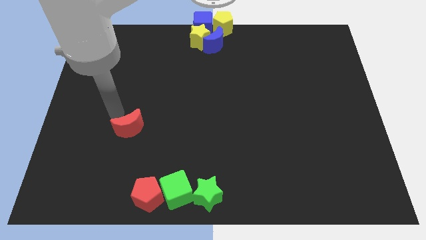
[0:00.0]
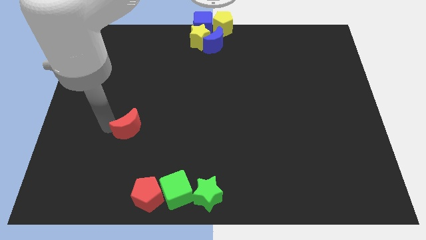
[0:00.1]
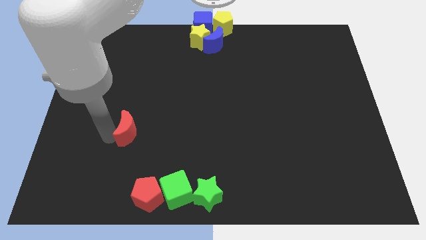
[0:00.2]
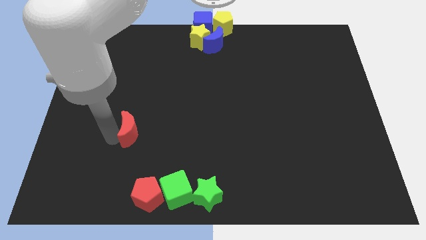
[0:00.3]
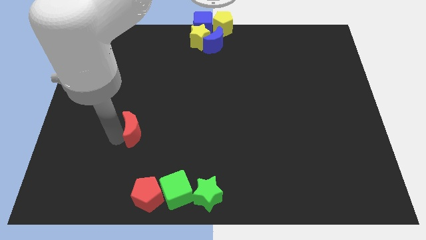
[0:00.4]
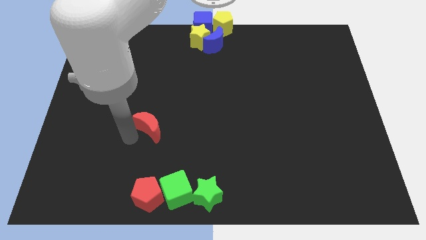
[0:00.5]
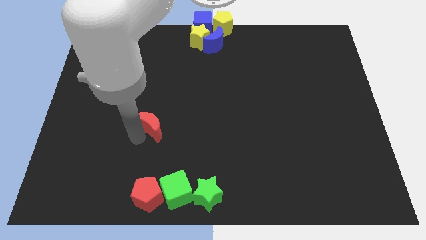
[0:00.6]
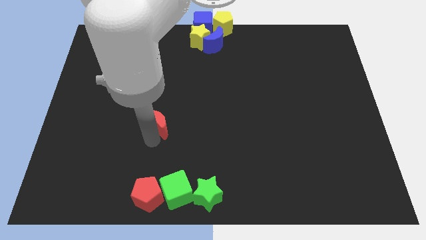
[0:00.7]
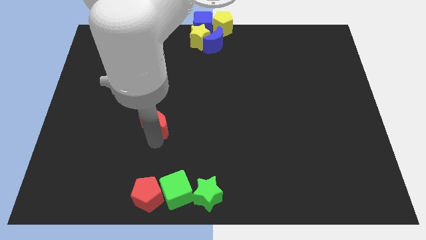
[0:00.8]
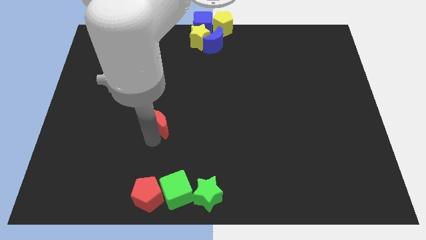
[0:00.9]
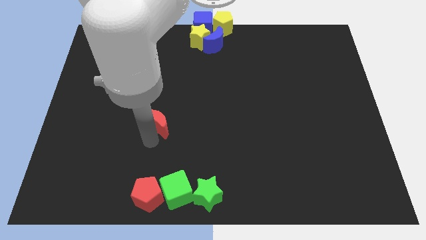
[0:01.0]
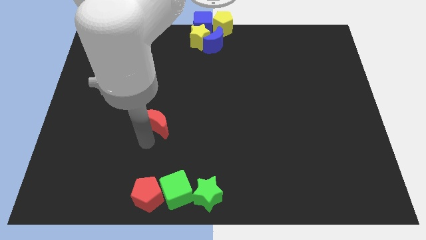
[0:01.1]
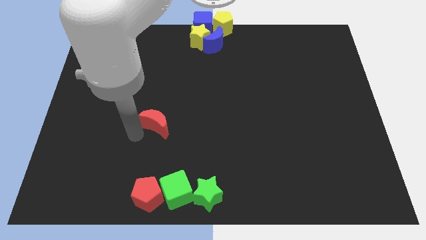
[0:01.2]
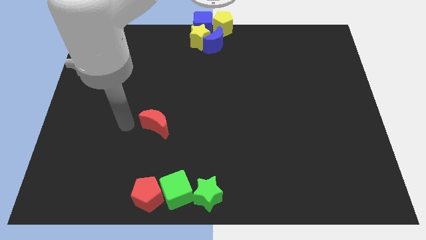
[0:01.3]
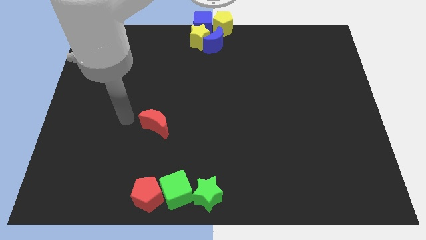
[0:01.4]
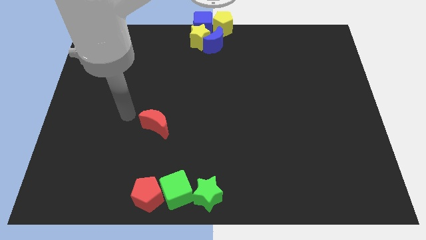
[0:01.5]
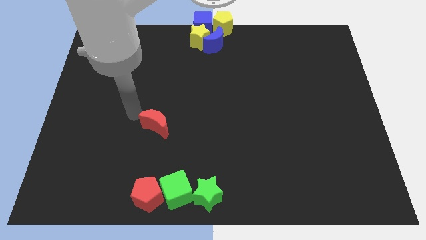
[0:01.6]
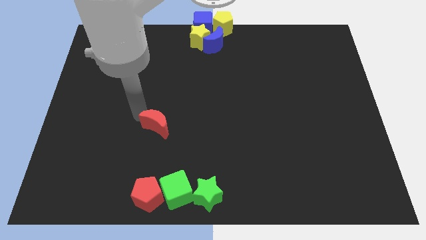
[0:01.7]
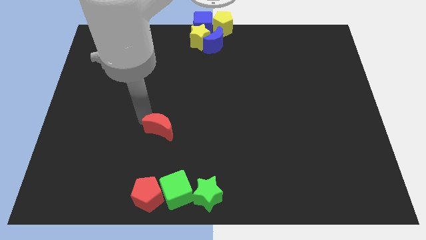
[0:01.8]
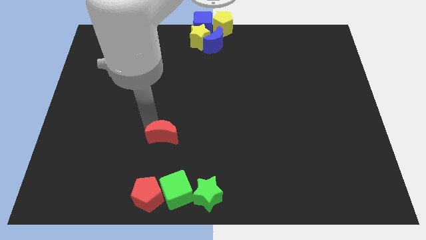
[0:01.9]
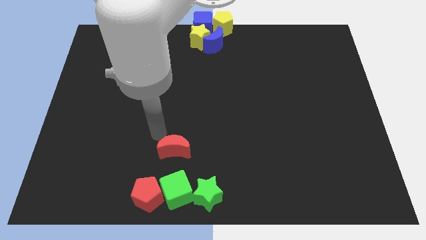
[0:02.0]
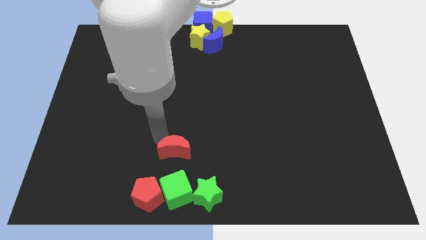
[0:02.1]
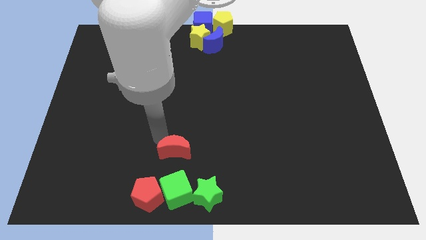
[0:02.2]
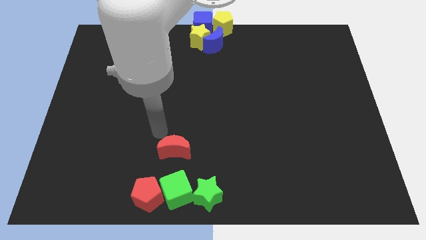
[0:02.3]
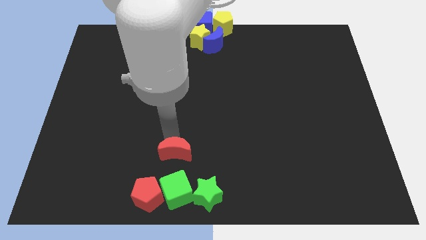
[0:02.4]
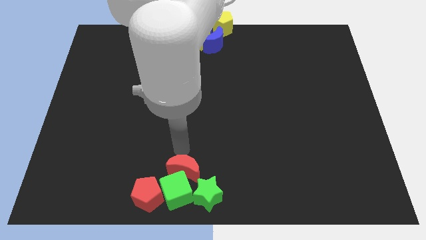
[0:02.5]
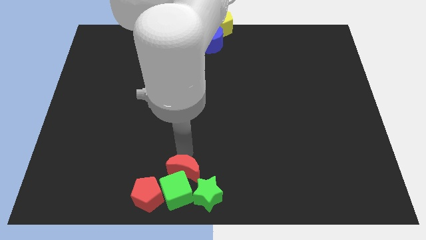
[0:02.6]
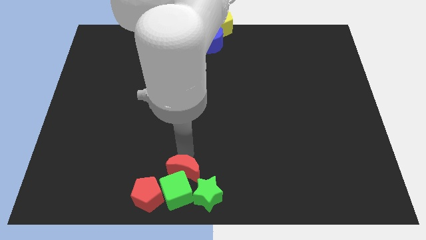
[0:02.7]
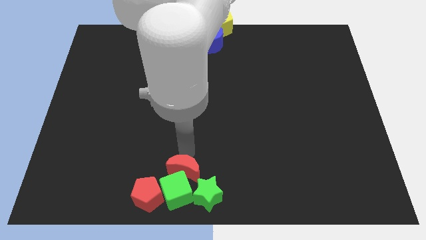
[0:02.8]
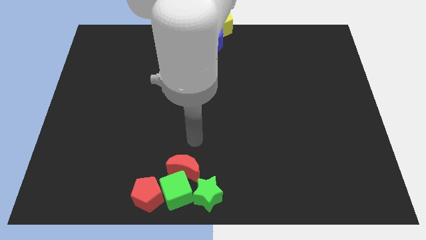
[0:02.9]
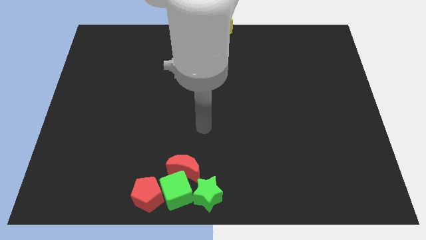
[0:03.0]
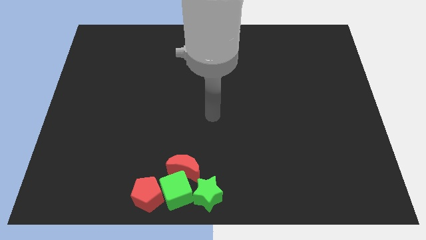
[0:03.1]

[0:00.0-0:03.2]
move the red crescent to the top of the green cube

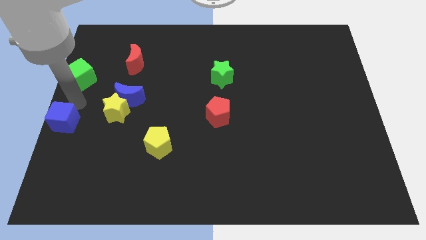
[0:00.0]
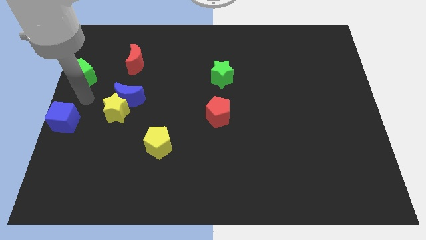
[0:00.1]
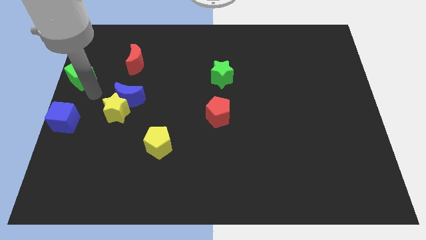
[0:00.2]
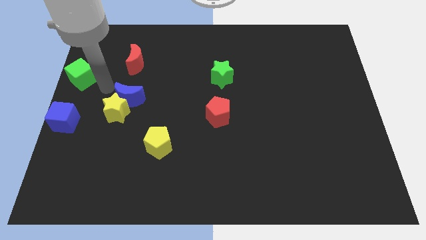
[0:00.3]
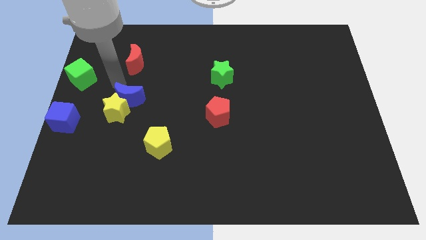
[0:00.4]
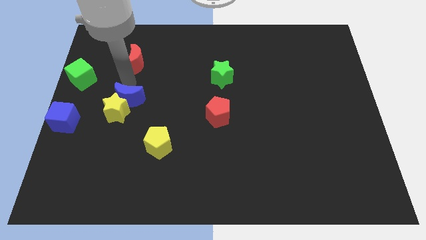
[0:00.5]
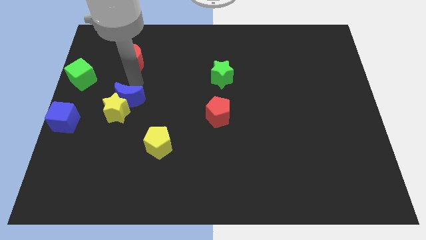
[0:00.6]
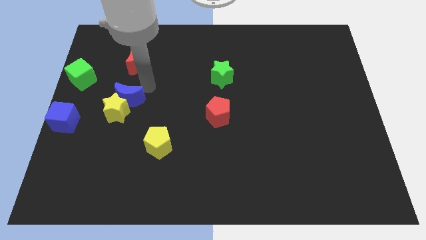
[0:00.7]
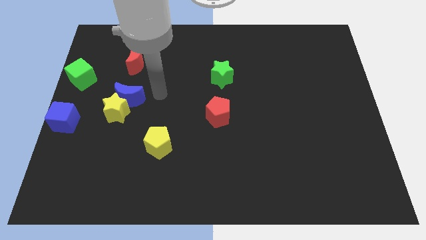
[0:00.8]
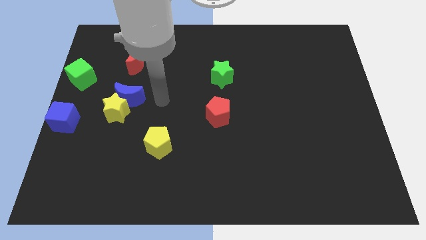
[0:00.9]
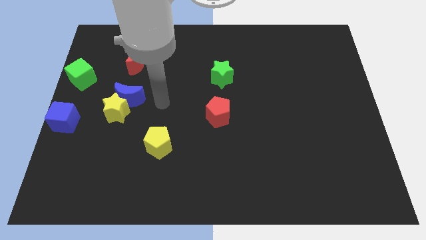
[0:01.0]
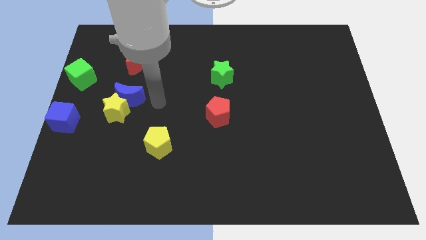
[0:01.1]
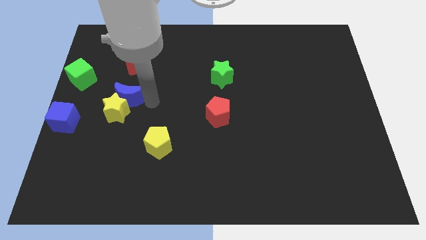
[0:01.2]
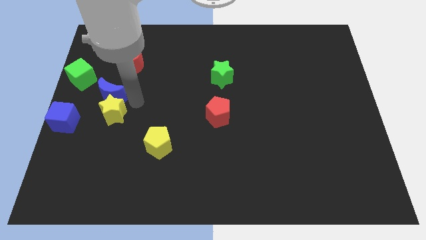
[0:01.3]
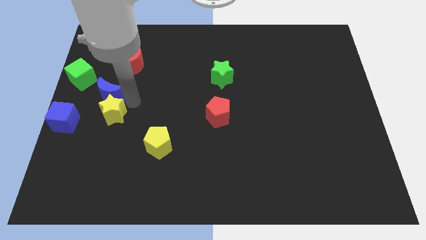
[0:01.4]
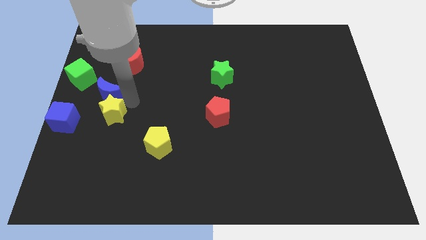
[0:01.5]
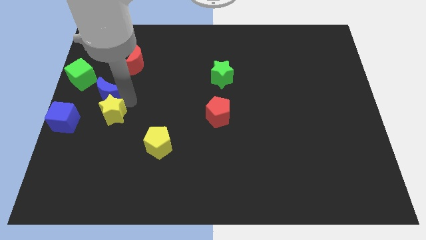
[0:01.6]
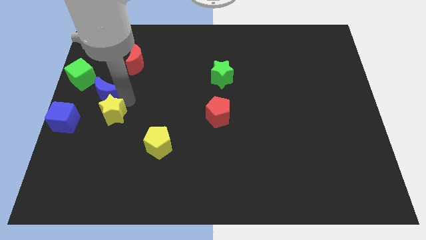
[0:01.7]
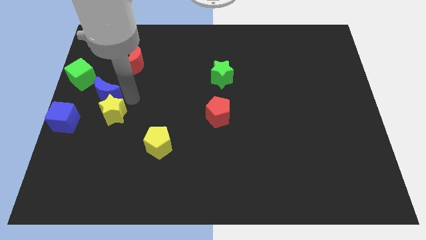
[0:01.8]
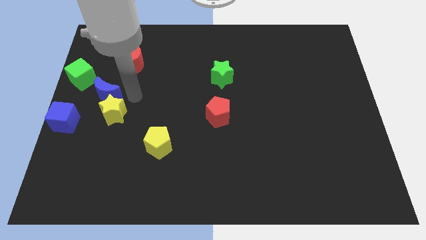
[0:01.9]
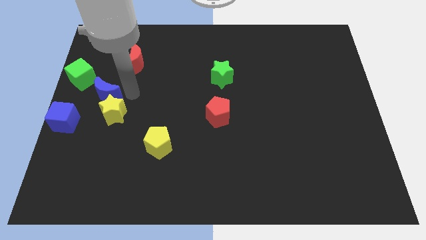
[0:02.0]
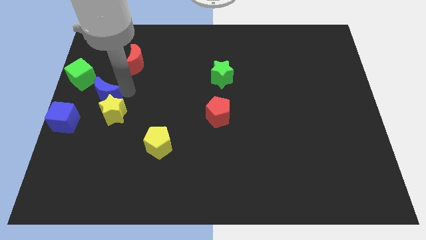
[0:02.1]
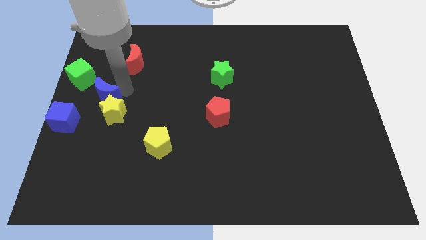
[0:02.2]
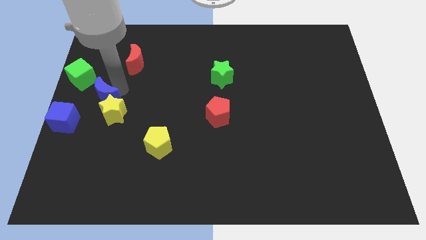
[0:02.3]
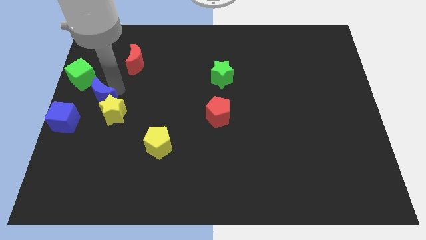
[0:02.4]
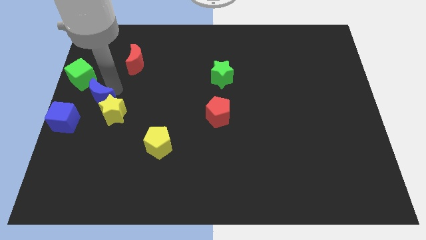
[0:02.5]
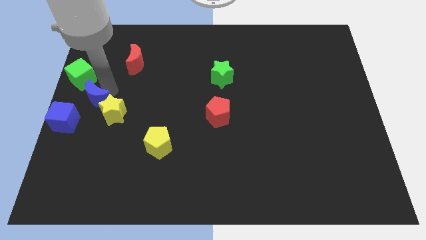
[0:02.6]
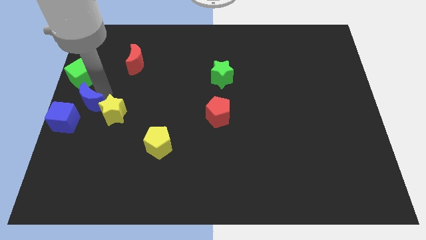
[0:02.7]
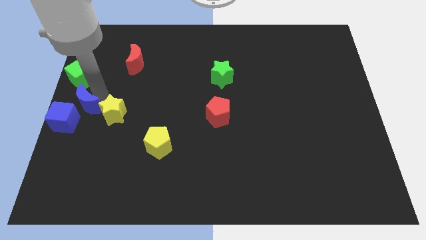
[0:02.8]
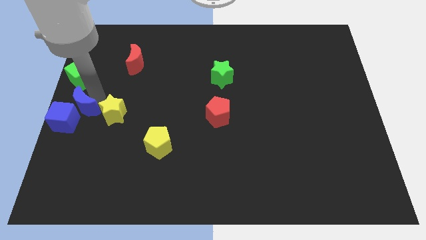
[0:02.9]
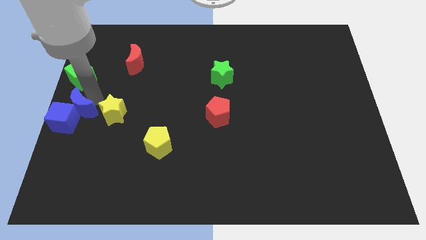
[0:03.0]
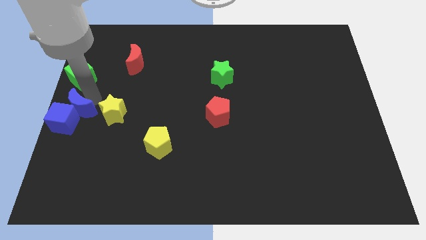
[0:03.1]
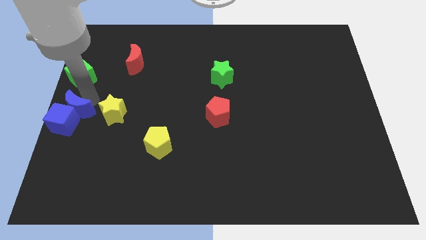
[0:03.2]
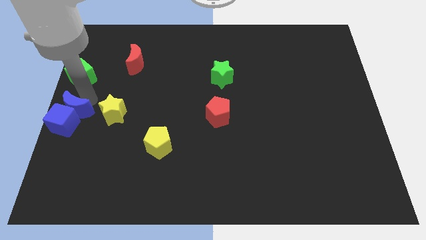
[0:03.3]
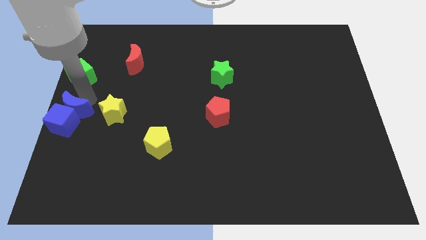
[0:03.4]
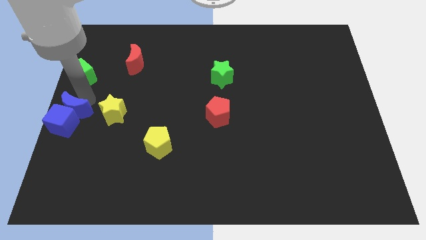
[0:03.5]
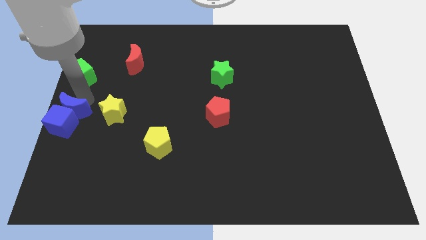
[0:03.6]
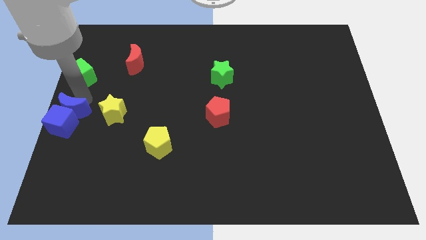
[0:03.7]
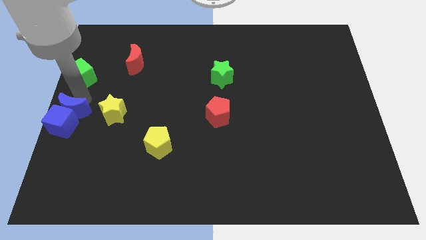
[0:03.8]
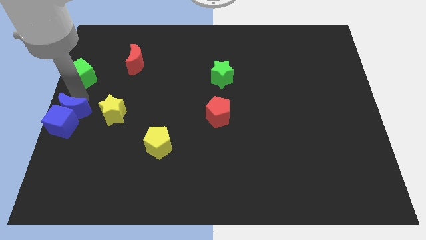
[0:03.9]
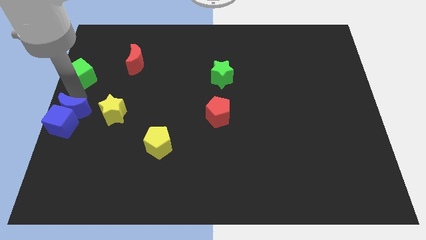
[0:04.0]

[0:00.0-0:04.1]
push the blue crescent to the top of the blue cube

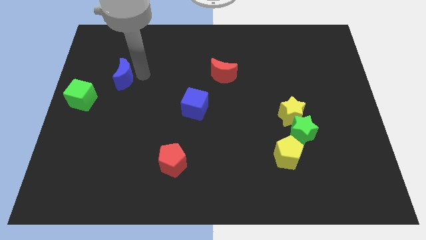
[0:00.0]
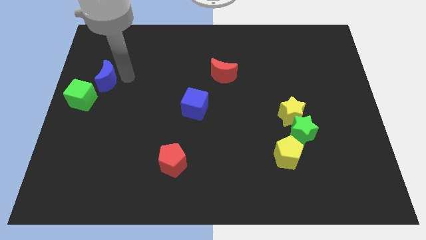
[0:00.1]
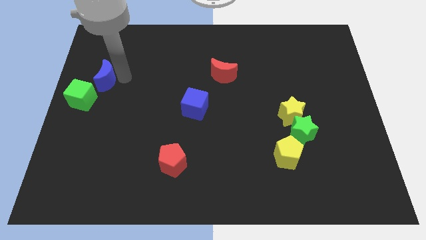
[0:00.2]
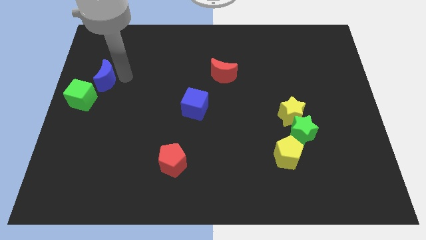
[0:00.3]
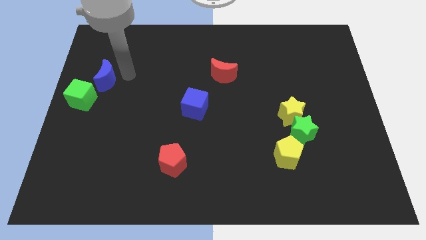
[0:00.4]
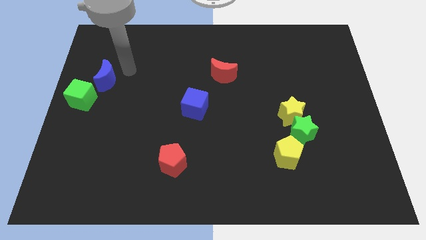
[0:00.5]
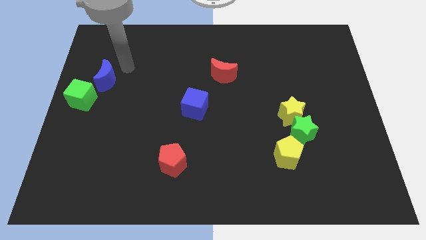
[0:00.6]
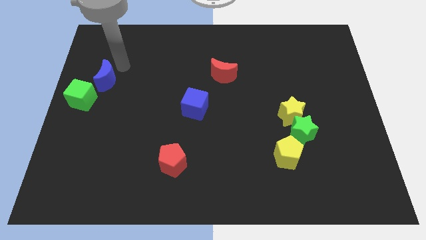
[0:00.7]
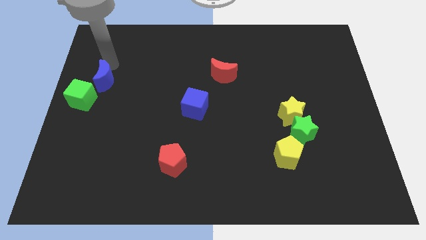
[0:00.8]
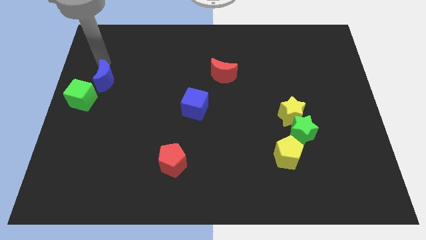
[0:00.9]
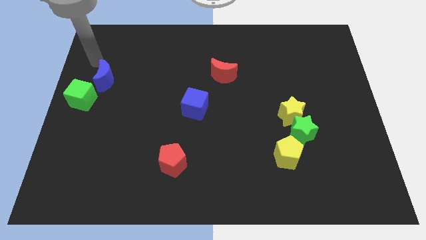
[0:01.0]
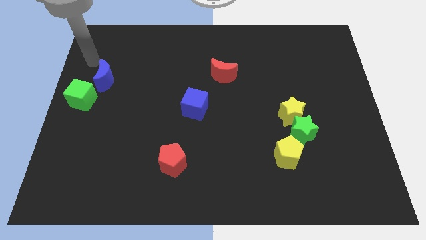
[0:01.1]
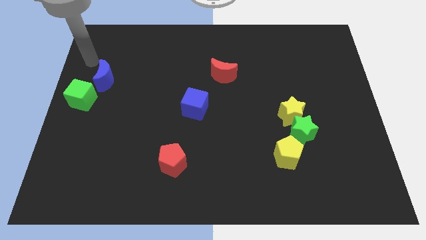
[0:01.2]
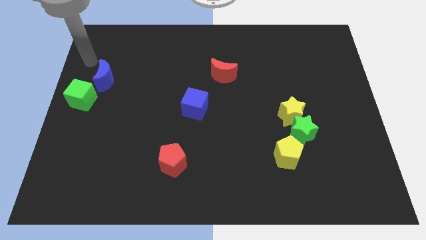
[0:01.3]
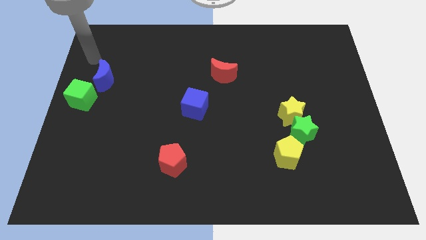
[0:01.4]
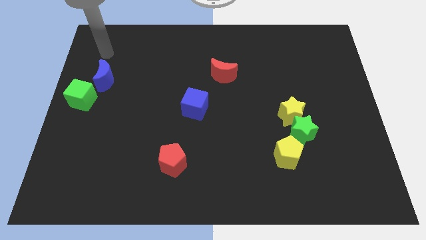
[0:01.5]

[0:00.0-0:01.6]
place the blue moon above the green cube
